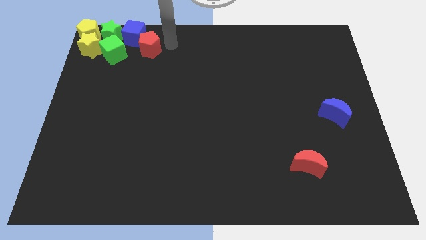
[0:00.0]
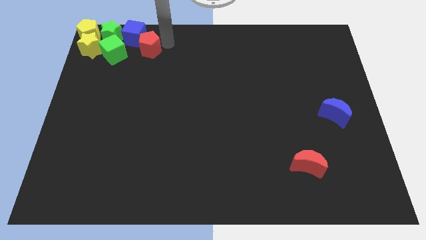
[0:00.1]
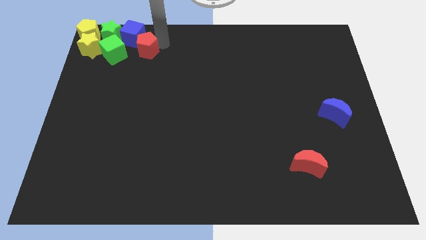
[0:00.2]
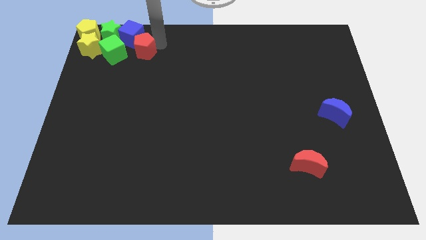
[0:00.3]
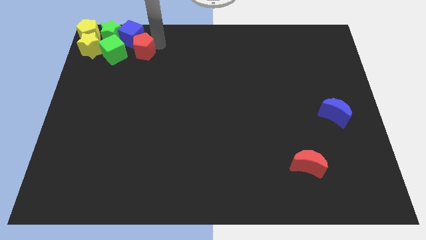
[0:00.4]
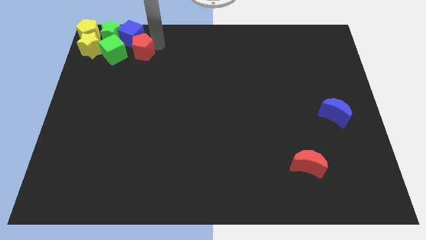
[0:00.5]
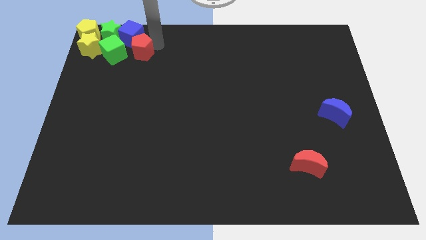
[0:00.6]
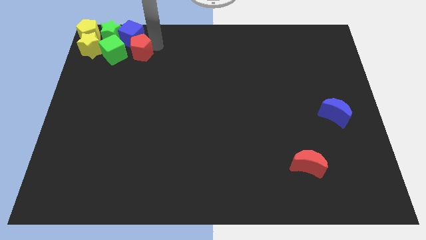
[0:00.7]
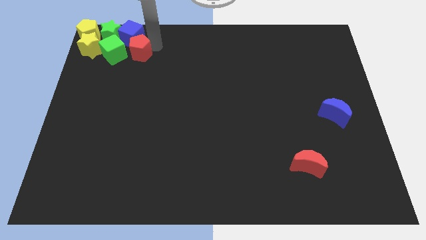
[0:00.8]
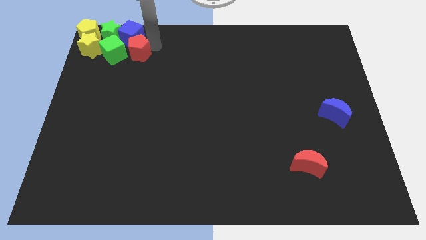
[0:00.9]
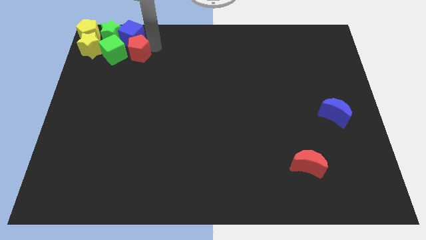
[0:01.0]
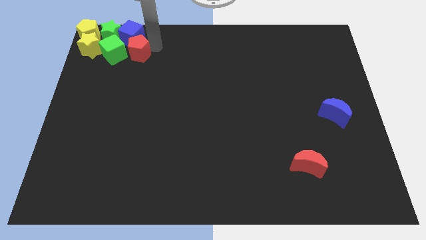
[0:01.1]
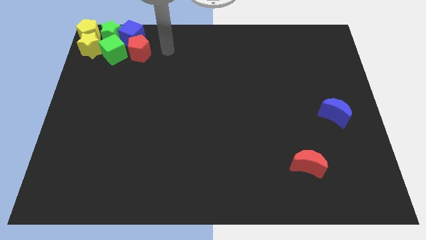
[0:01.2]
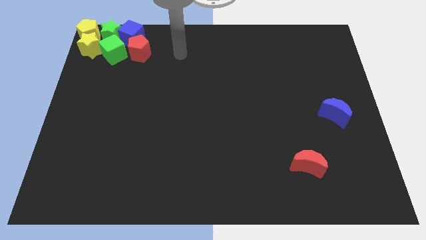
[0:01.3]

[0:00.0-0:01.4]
place the red pentagon right to the green cube

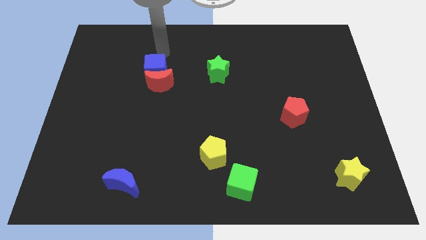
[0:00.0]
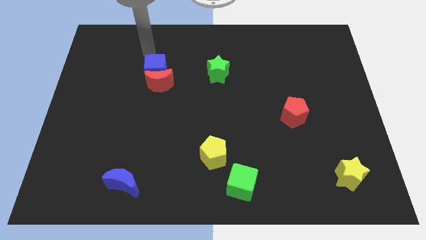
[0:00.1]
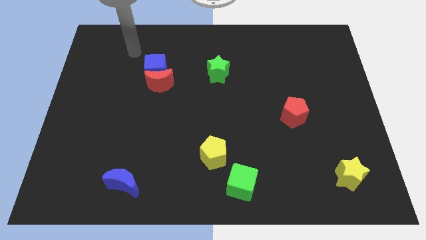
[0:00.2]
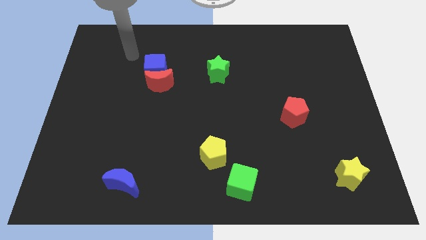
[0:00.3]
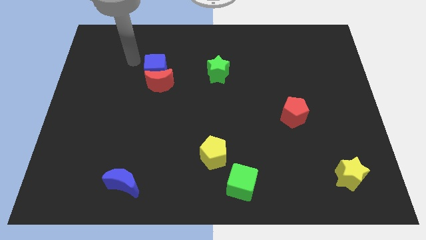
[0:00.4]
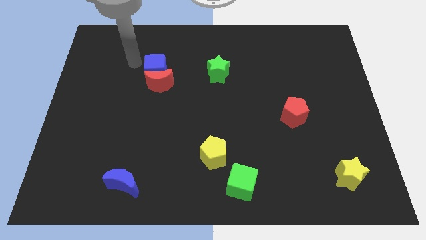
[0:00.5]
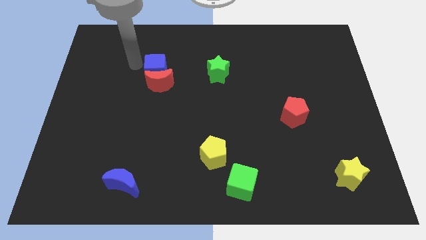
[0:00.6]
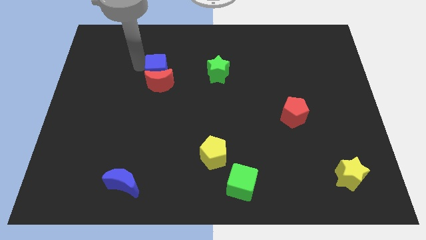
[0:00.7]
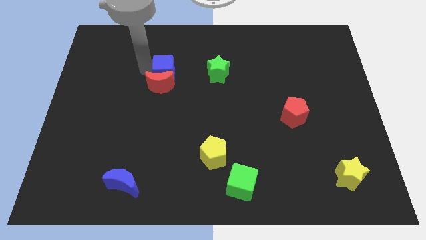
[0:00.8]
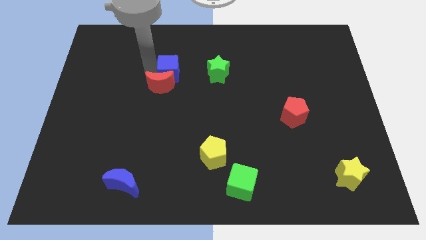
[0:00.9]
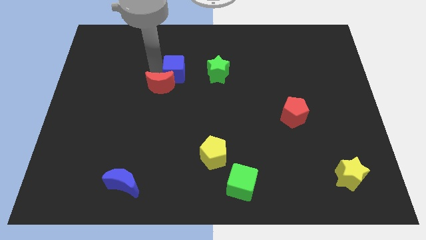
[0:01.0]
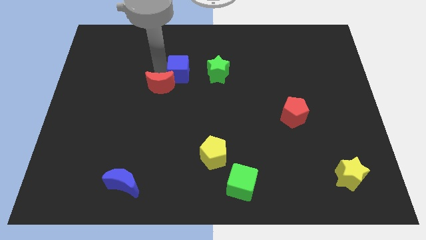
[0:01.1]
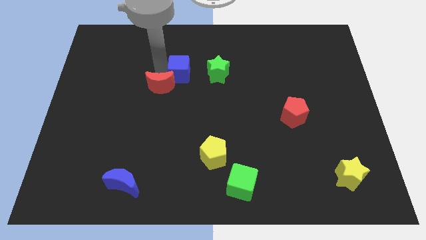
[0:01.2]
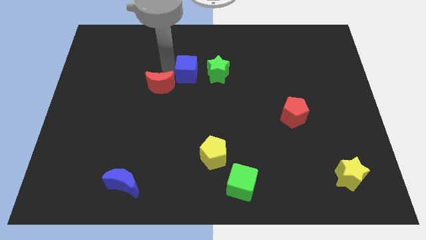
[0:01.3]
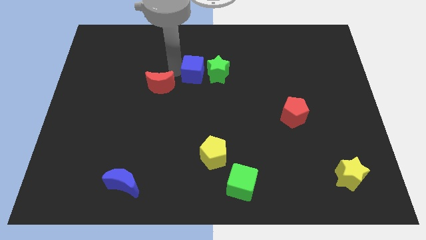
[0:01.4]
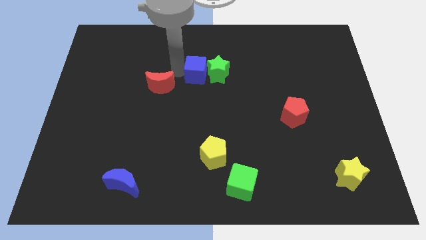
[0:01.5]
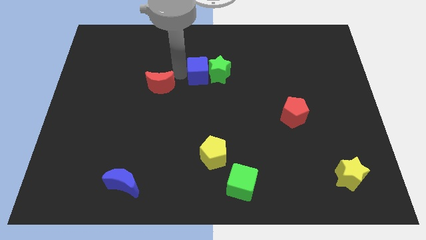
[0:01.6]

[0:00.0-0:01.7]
push the blue cube into the green star

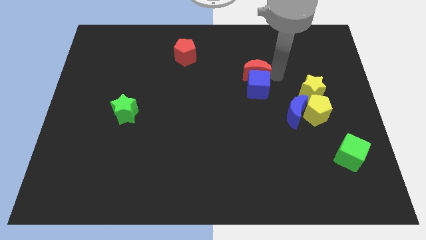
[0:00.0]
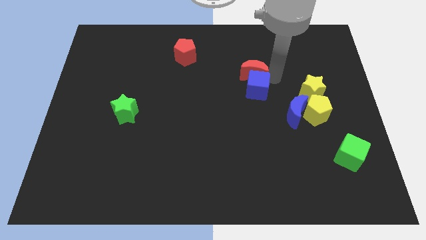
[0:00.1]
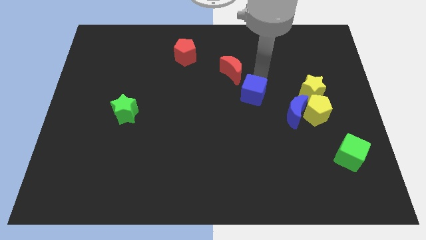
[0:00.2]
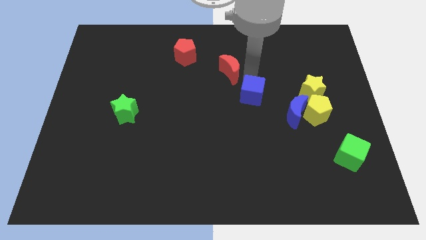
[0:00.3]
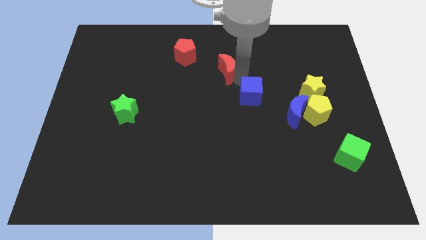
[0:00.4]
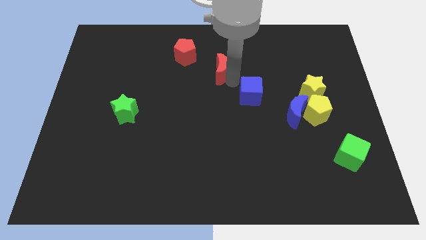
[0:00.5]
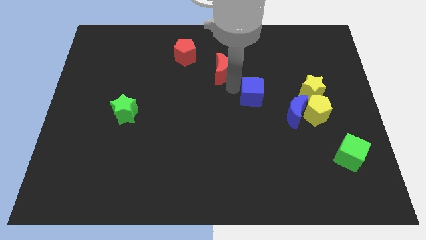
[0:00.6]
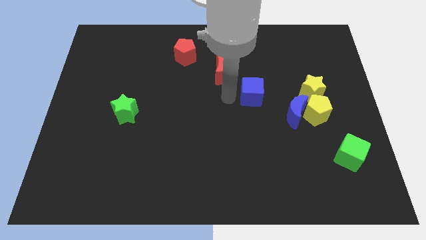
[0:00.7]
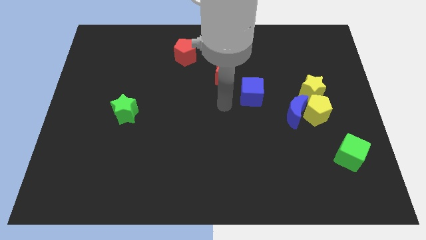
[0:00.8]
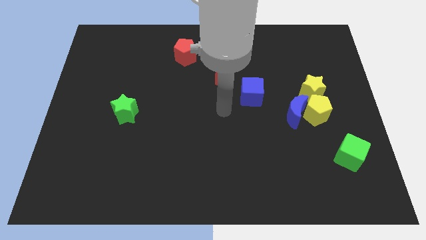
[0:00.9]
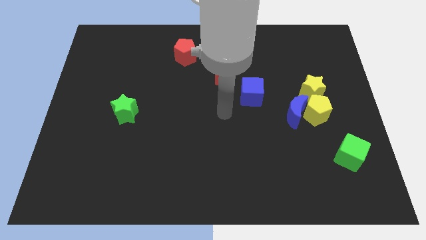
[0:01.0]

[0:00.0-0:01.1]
push red moon towards left

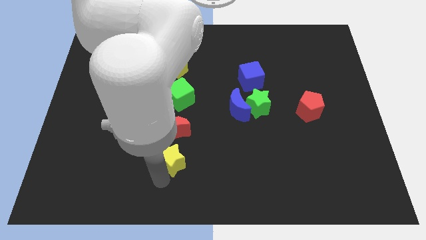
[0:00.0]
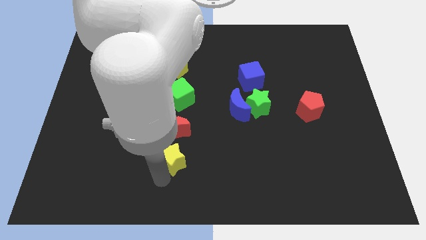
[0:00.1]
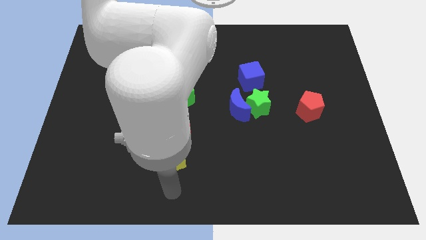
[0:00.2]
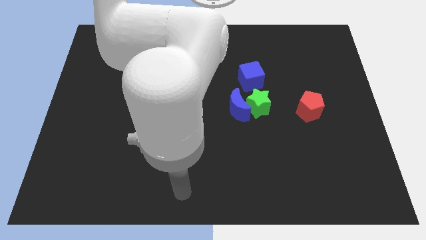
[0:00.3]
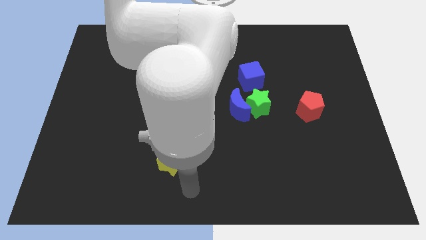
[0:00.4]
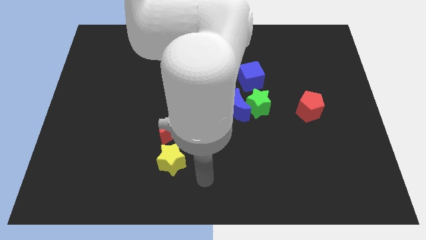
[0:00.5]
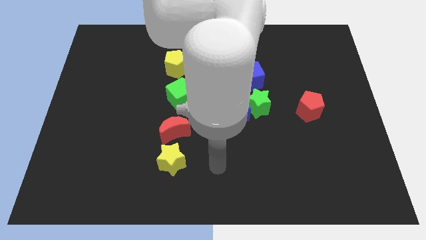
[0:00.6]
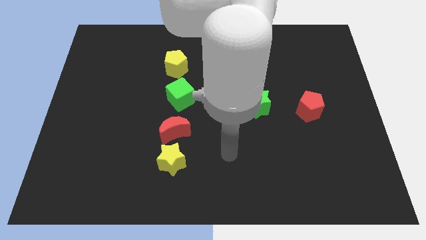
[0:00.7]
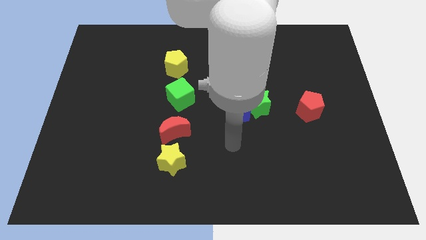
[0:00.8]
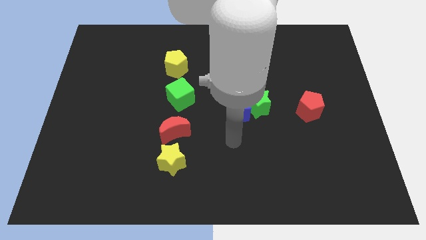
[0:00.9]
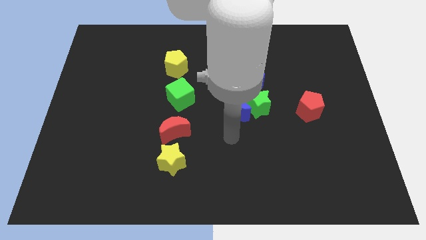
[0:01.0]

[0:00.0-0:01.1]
place your arm to the bottom of blue moon

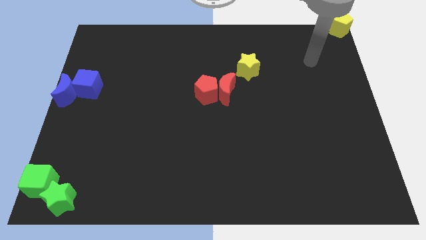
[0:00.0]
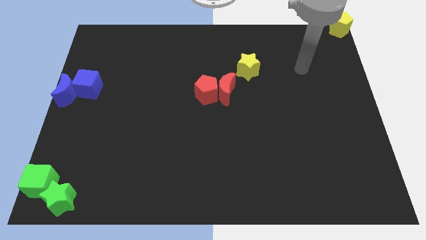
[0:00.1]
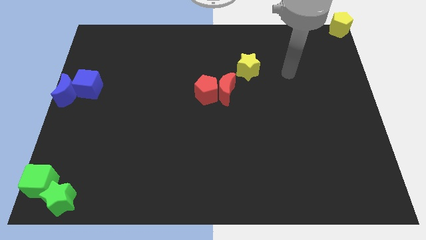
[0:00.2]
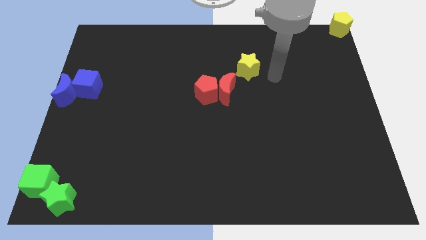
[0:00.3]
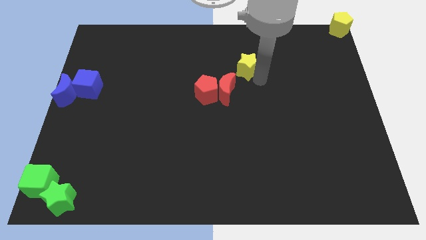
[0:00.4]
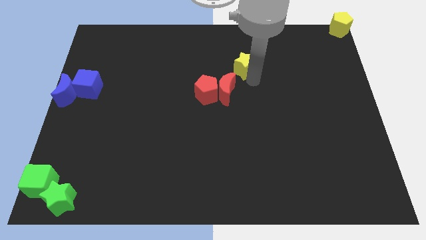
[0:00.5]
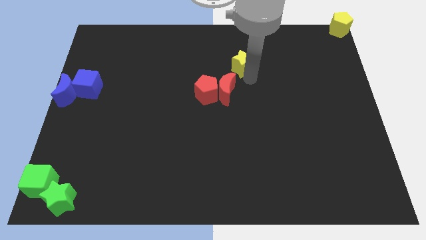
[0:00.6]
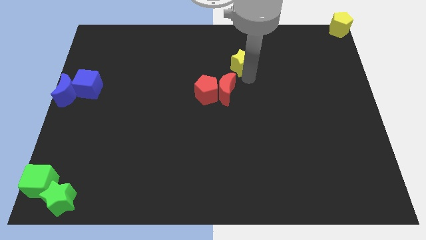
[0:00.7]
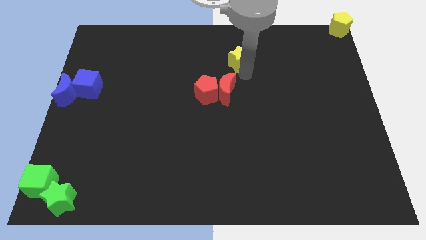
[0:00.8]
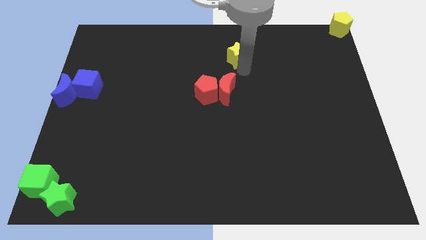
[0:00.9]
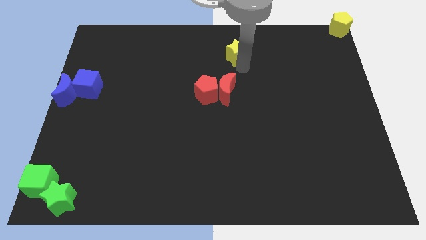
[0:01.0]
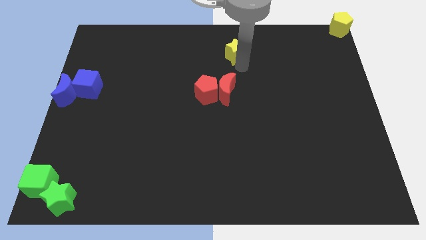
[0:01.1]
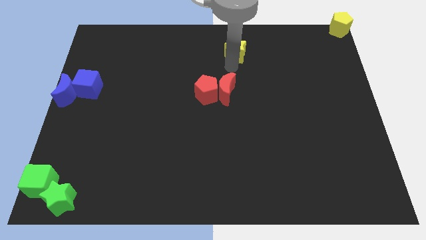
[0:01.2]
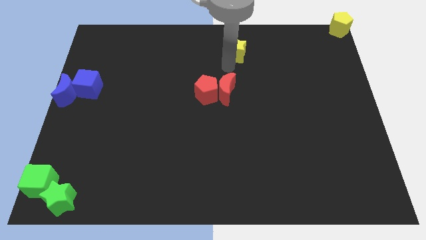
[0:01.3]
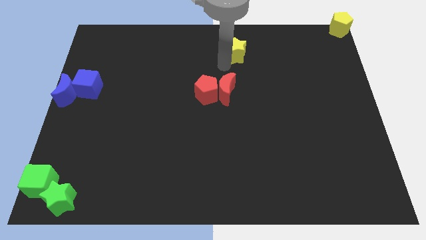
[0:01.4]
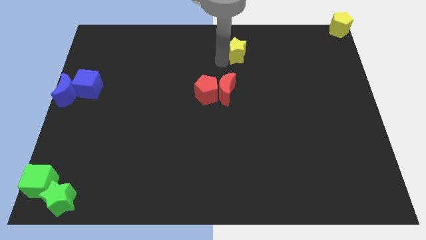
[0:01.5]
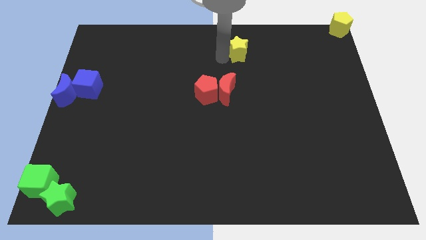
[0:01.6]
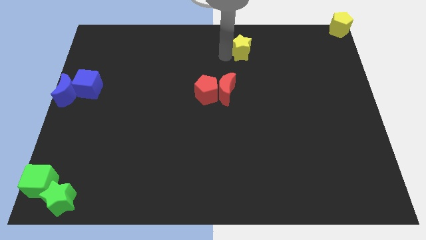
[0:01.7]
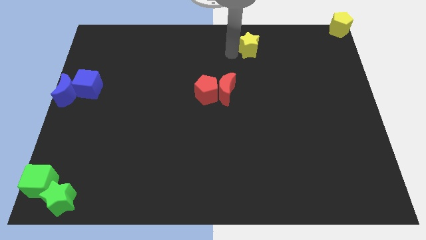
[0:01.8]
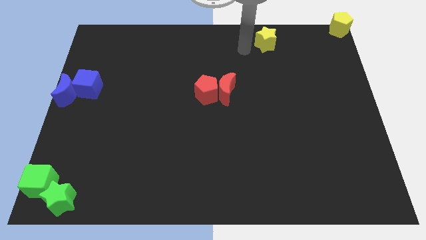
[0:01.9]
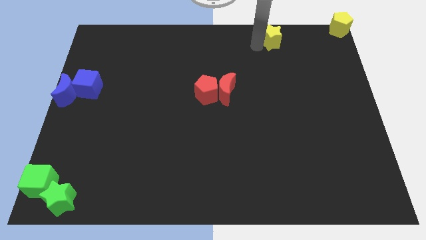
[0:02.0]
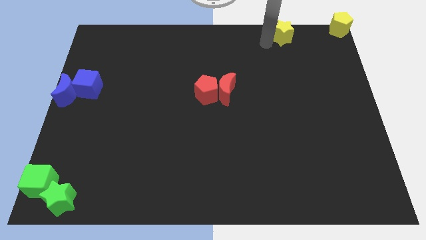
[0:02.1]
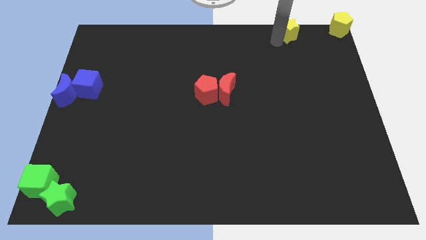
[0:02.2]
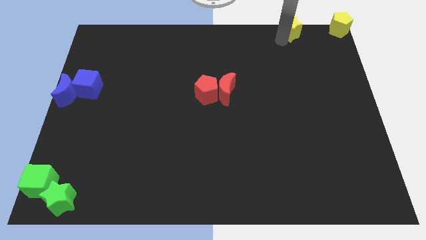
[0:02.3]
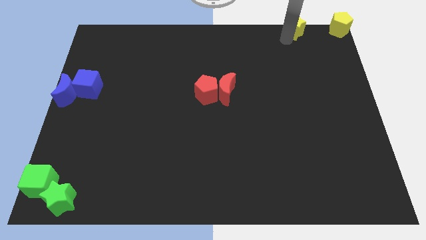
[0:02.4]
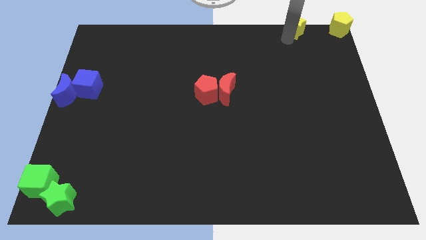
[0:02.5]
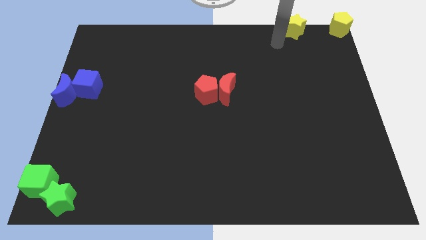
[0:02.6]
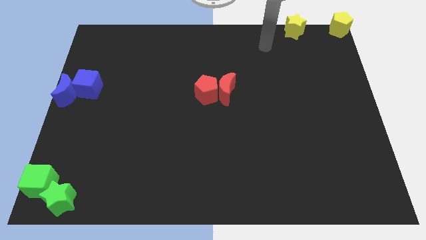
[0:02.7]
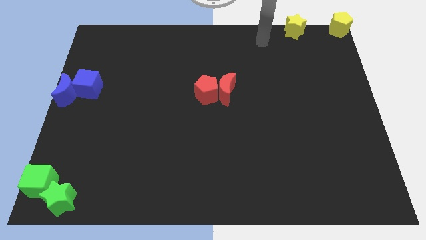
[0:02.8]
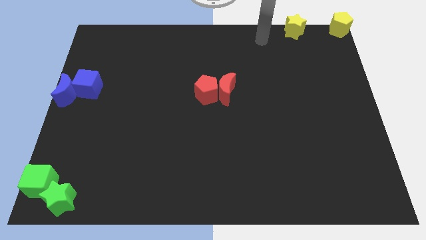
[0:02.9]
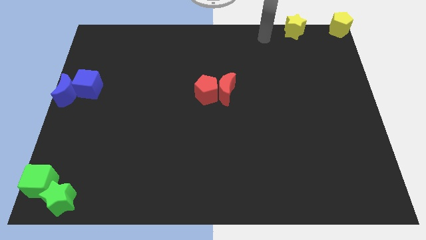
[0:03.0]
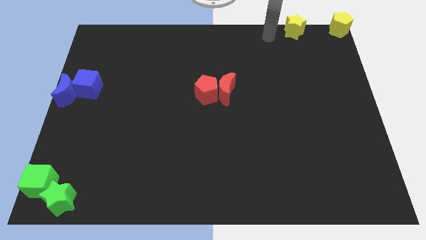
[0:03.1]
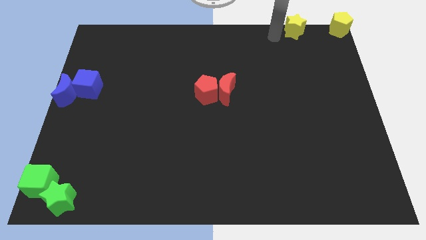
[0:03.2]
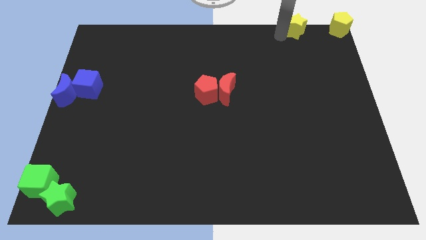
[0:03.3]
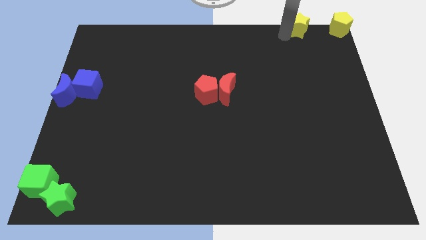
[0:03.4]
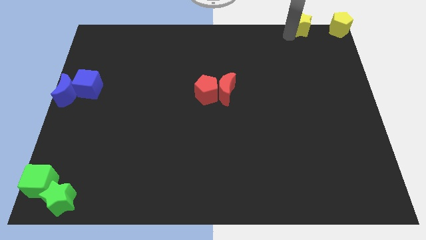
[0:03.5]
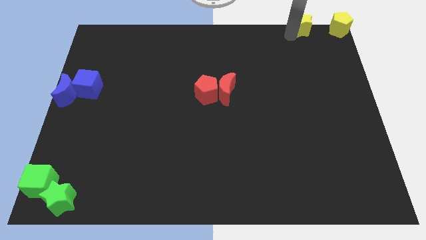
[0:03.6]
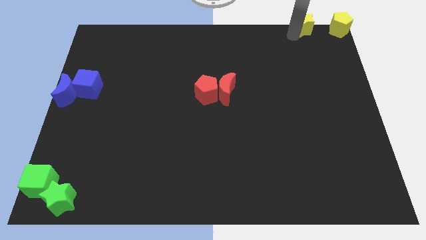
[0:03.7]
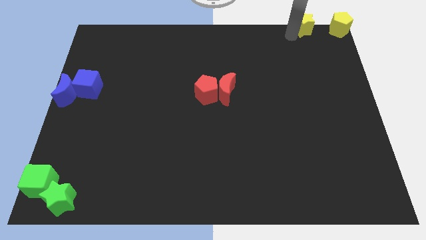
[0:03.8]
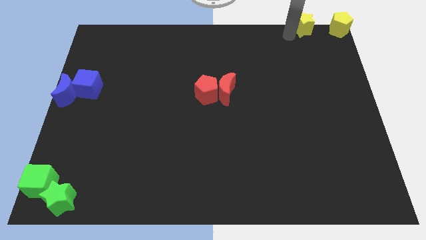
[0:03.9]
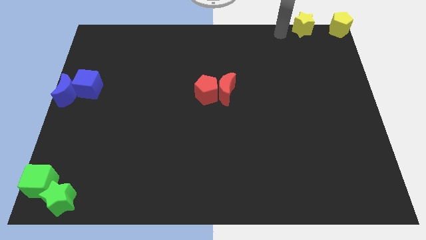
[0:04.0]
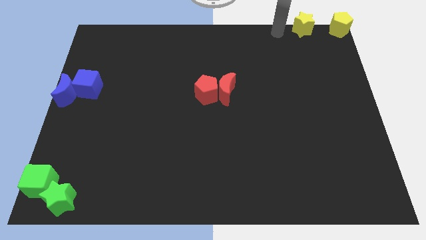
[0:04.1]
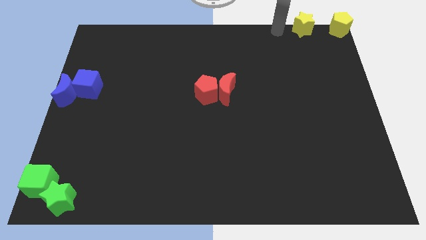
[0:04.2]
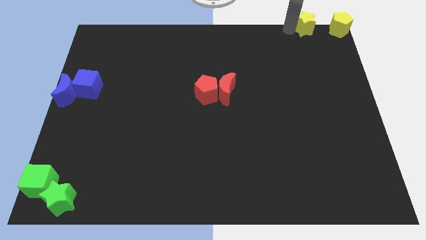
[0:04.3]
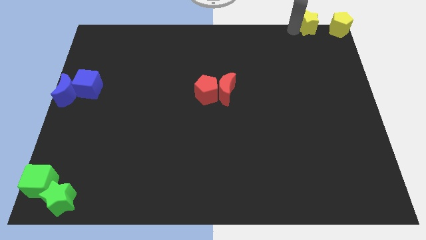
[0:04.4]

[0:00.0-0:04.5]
place the yellow star to the left of the yellow pentagon
